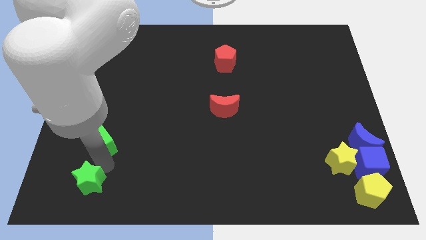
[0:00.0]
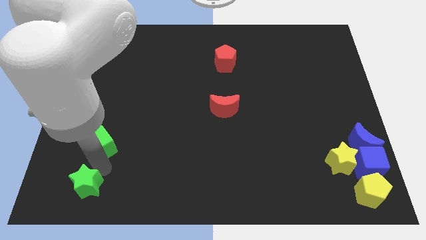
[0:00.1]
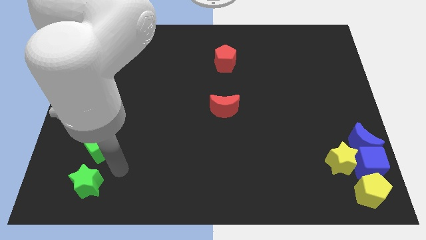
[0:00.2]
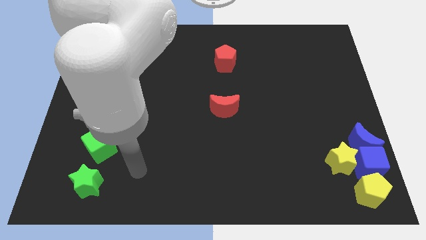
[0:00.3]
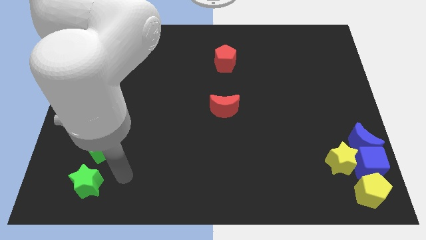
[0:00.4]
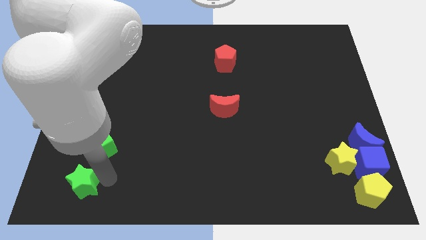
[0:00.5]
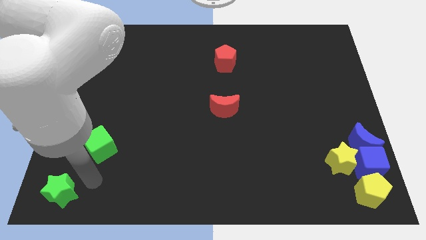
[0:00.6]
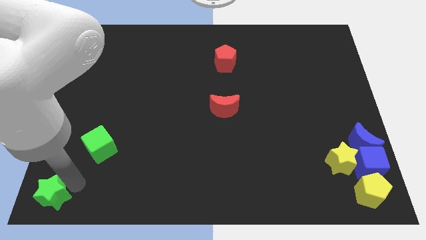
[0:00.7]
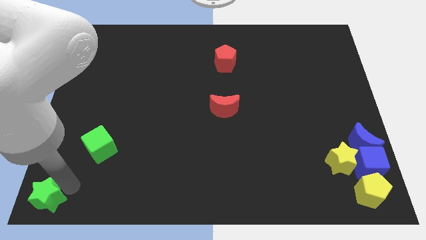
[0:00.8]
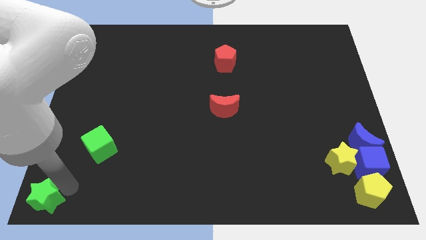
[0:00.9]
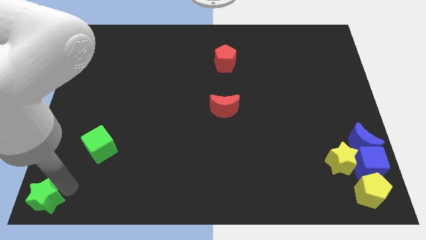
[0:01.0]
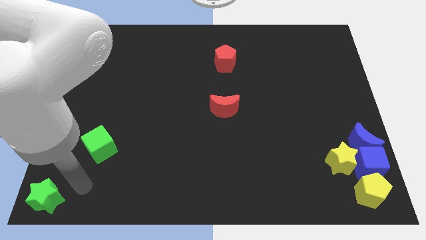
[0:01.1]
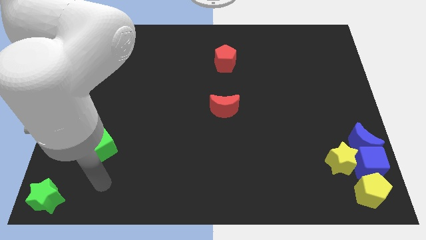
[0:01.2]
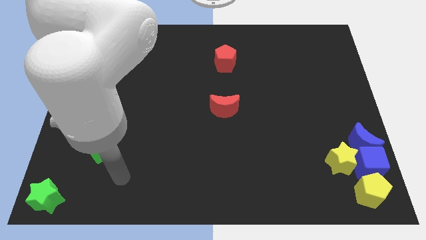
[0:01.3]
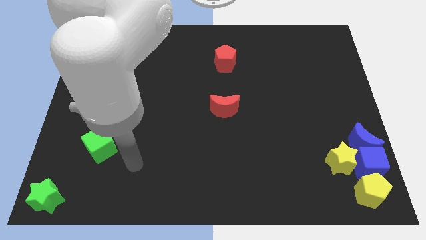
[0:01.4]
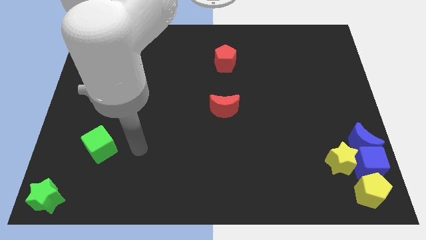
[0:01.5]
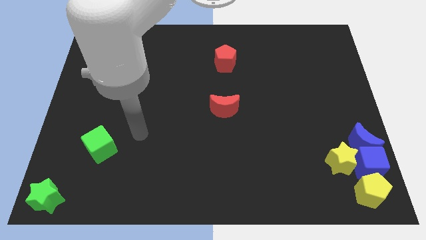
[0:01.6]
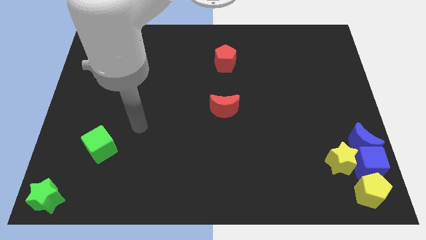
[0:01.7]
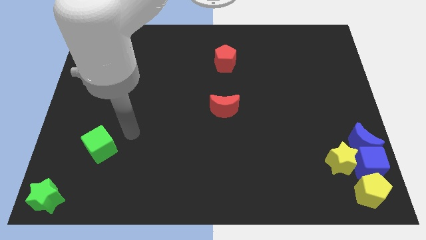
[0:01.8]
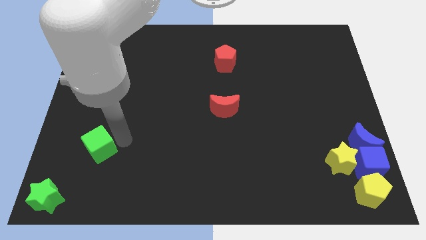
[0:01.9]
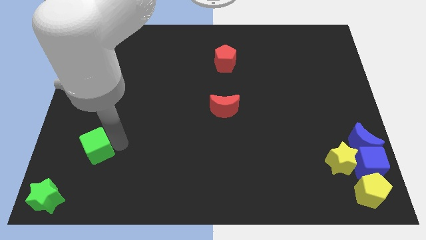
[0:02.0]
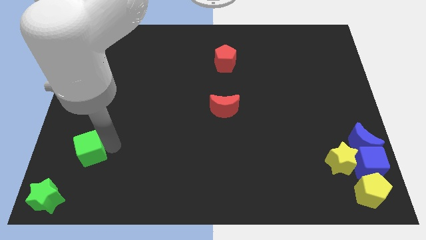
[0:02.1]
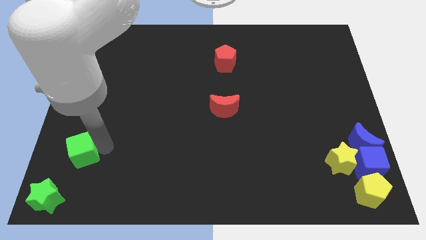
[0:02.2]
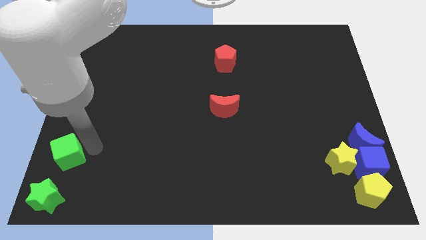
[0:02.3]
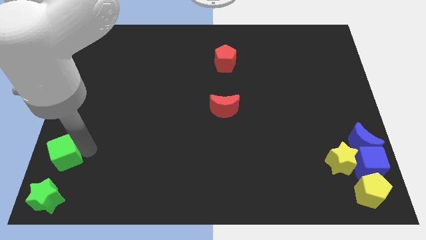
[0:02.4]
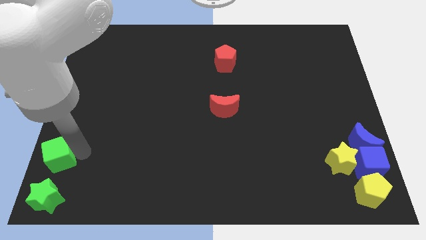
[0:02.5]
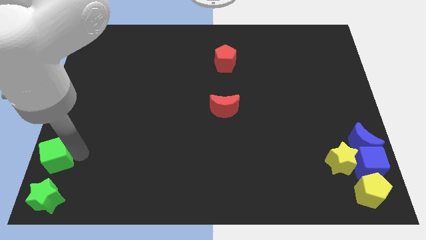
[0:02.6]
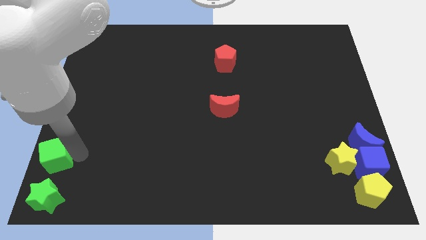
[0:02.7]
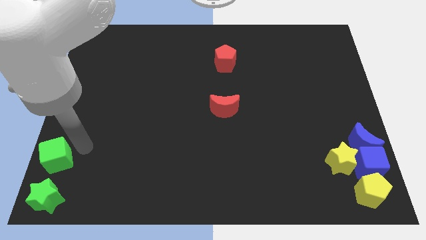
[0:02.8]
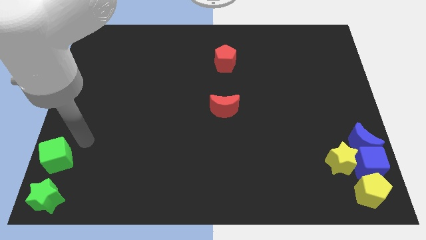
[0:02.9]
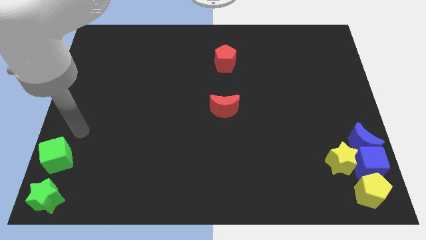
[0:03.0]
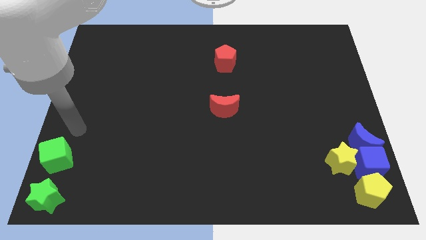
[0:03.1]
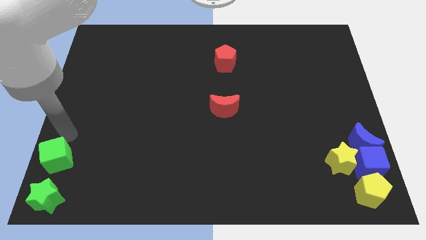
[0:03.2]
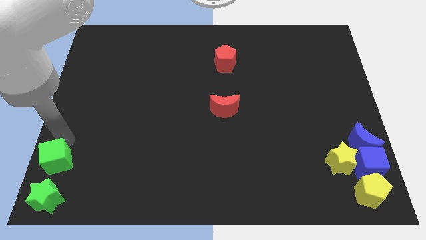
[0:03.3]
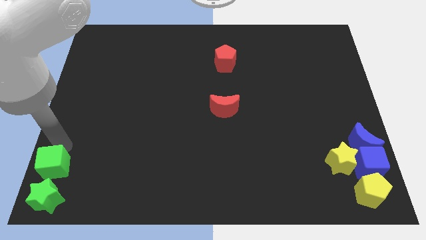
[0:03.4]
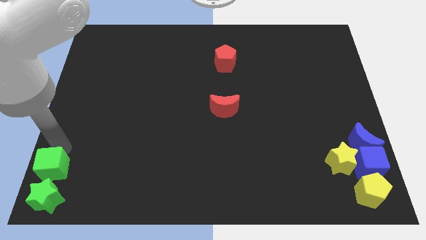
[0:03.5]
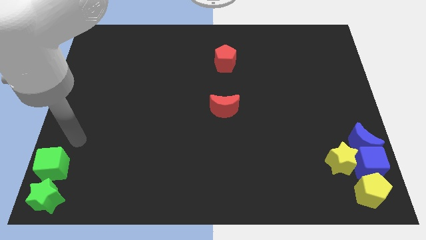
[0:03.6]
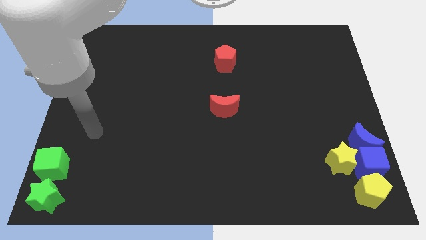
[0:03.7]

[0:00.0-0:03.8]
move the green star and green cube to the bottom left corner of the board

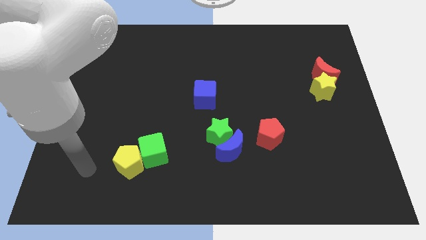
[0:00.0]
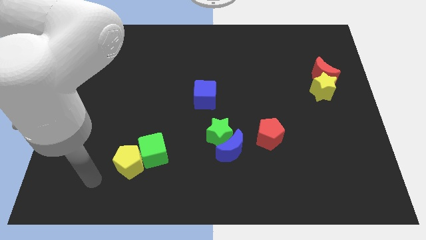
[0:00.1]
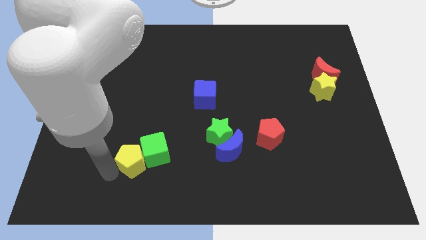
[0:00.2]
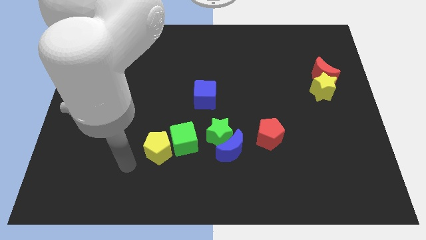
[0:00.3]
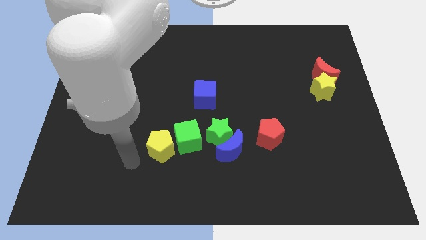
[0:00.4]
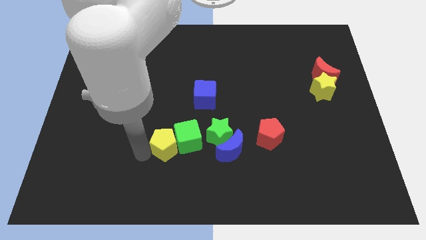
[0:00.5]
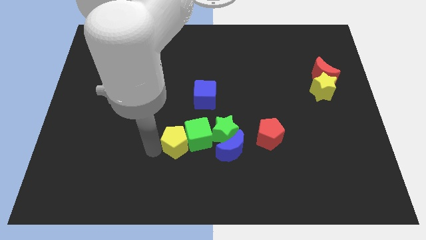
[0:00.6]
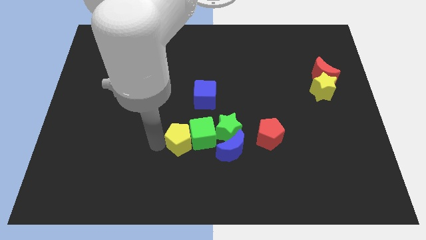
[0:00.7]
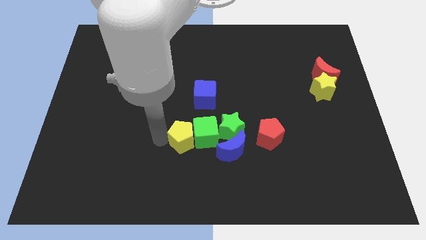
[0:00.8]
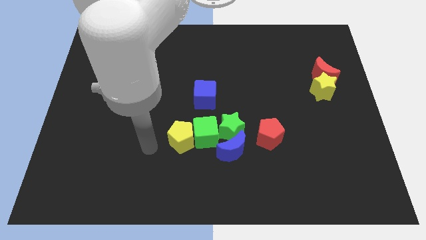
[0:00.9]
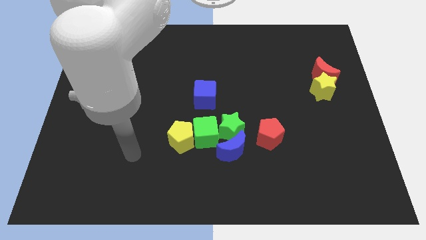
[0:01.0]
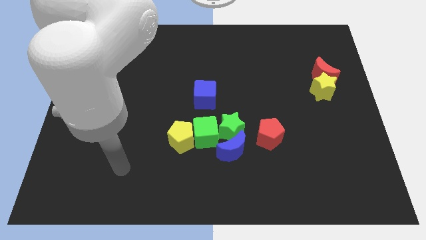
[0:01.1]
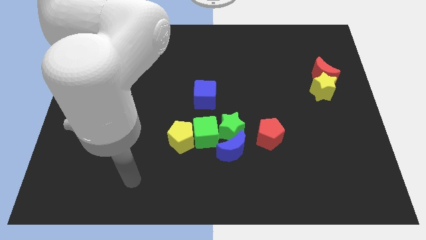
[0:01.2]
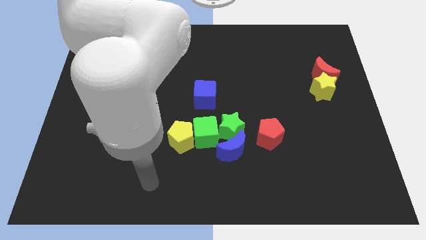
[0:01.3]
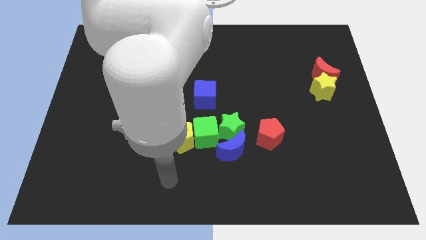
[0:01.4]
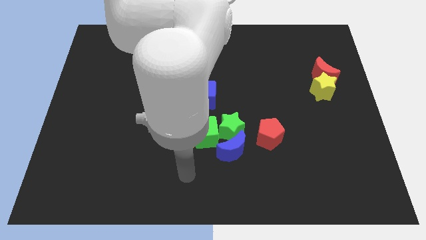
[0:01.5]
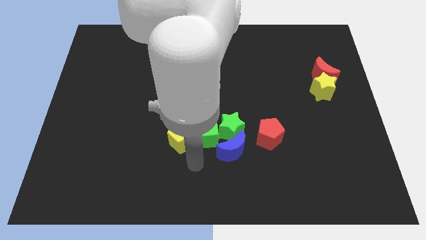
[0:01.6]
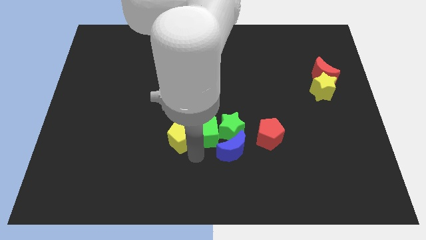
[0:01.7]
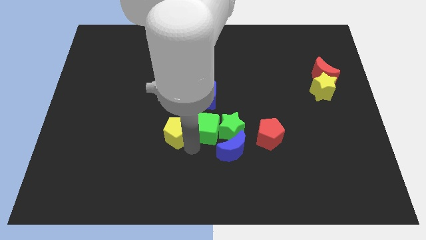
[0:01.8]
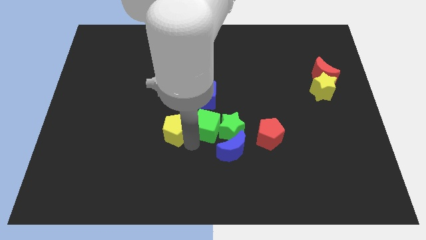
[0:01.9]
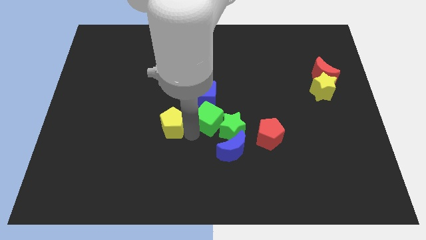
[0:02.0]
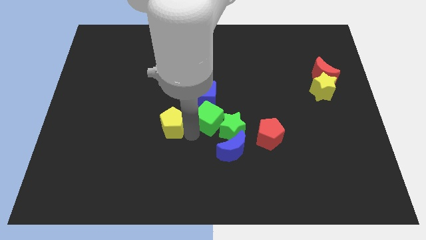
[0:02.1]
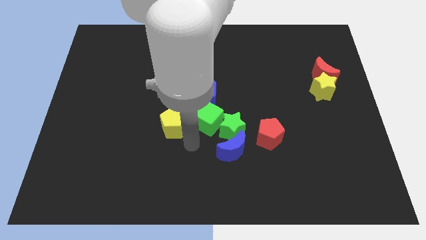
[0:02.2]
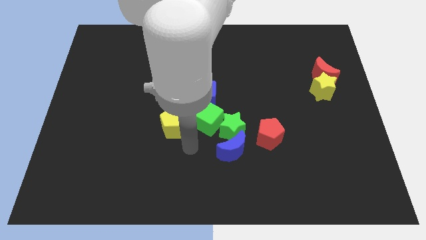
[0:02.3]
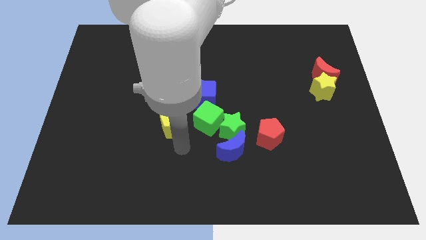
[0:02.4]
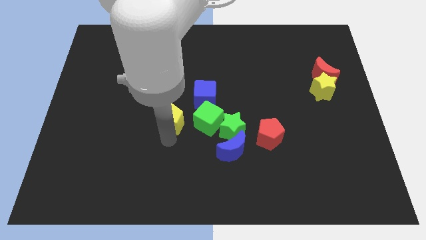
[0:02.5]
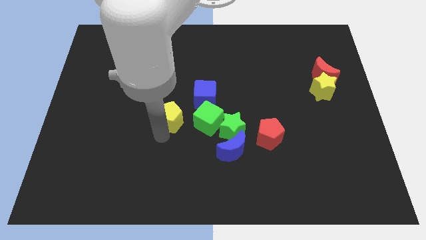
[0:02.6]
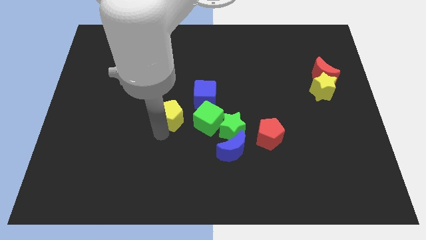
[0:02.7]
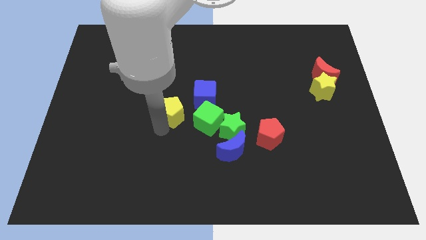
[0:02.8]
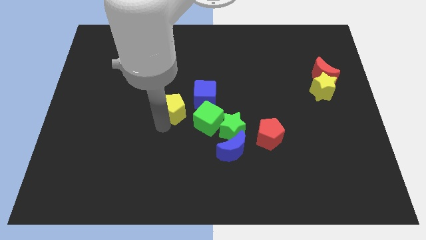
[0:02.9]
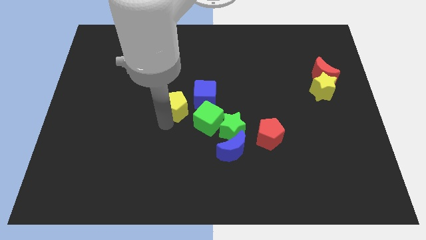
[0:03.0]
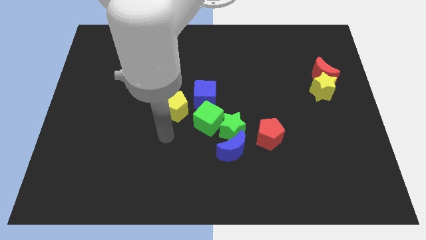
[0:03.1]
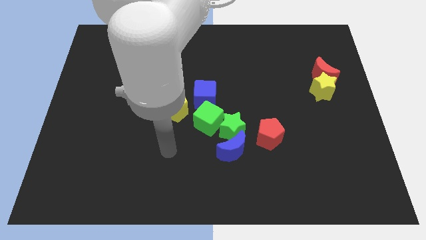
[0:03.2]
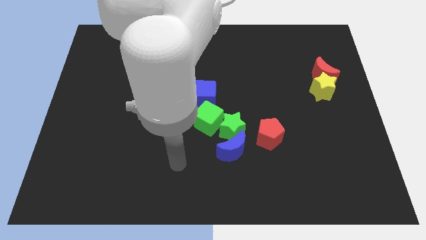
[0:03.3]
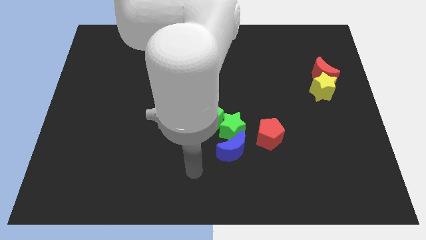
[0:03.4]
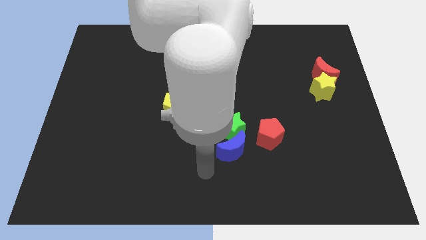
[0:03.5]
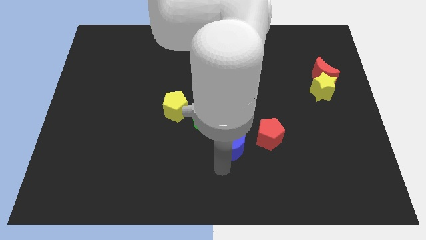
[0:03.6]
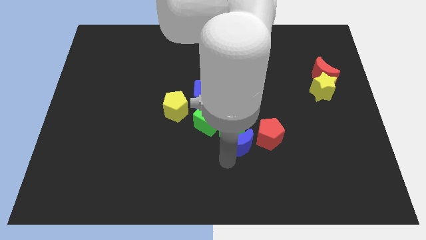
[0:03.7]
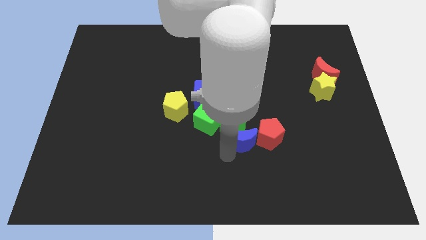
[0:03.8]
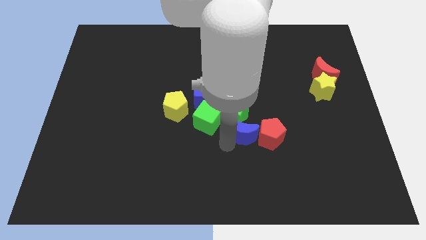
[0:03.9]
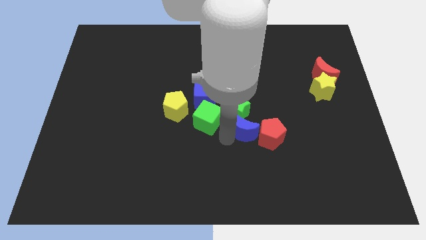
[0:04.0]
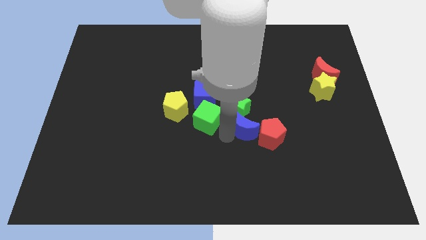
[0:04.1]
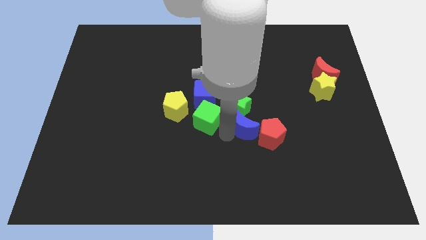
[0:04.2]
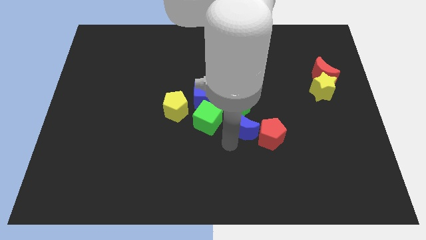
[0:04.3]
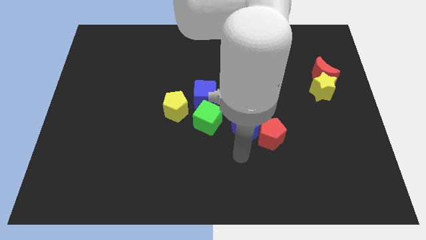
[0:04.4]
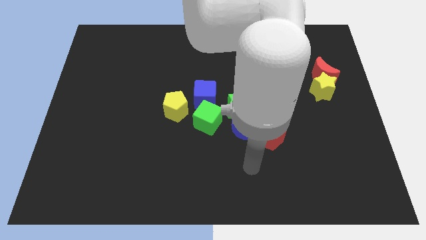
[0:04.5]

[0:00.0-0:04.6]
place the green cube below the blue cube

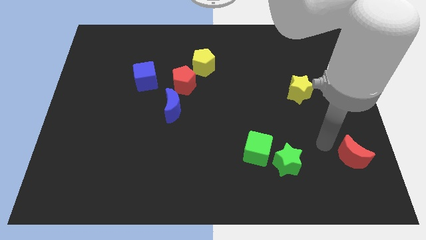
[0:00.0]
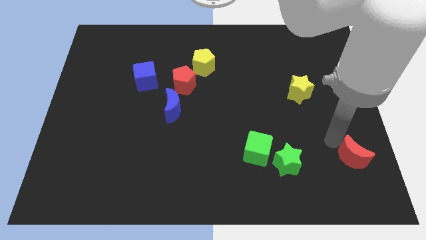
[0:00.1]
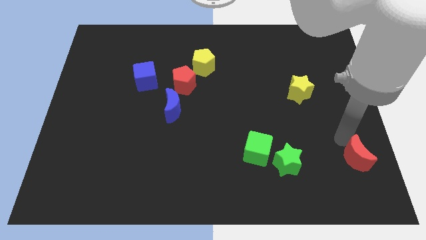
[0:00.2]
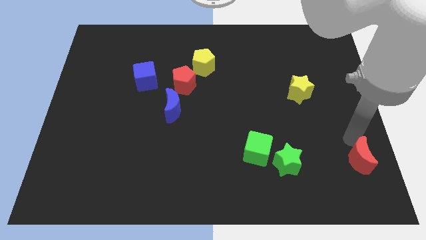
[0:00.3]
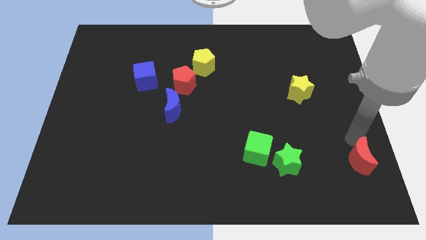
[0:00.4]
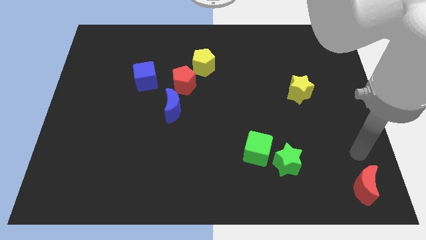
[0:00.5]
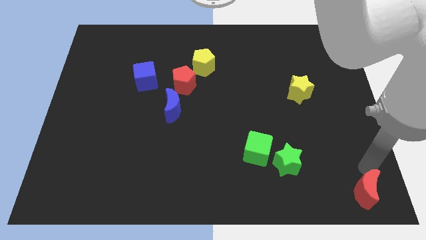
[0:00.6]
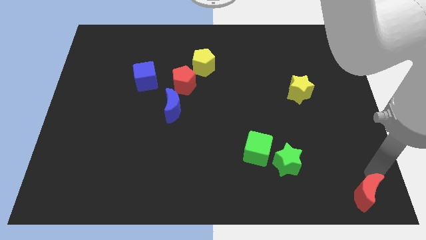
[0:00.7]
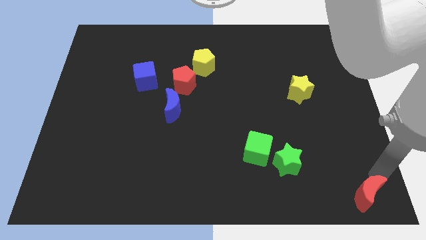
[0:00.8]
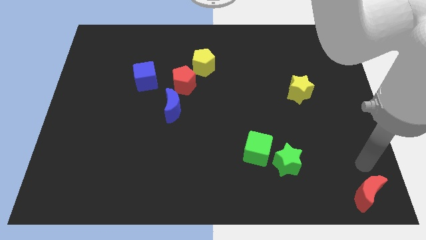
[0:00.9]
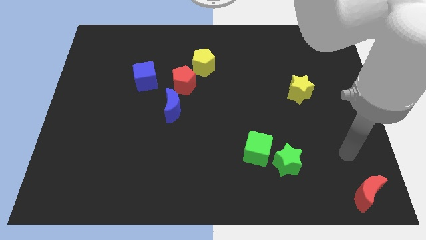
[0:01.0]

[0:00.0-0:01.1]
slide the red crescent to the bottom right corner of the board
